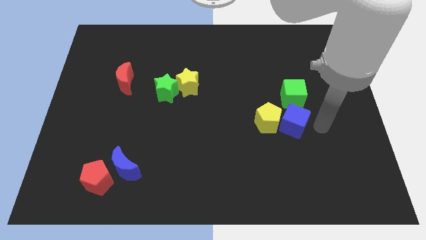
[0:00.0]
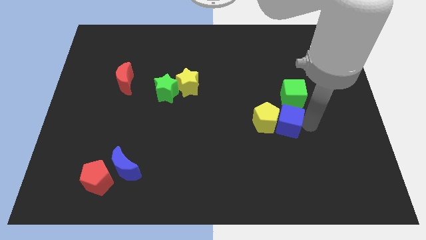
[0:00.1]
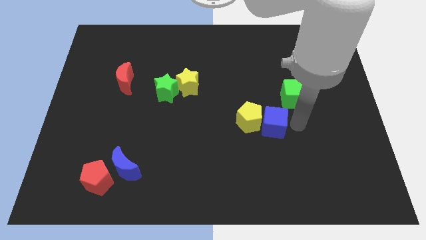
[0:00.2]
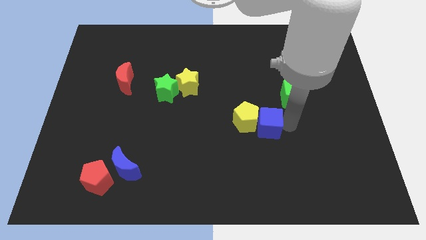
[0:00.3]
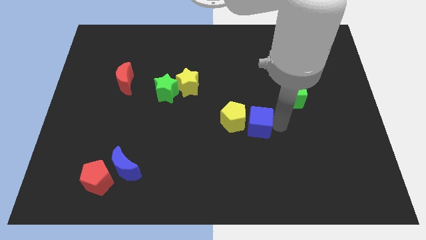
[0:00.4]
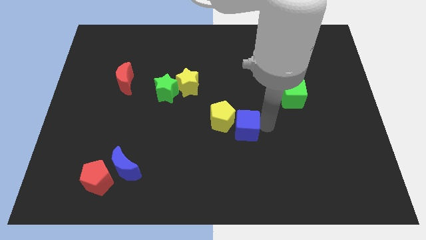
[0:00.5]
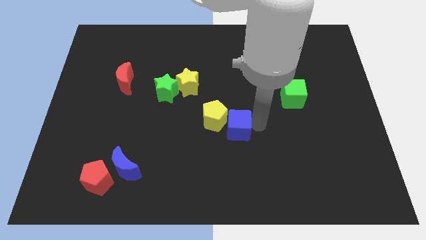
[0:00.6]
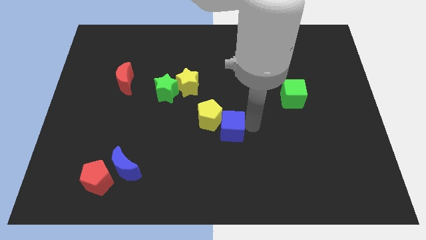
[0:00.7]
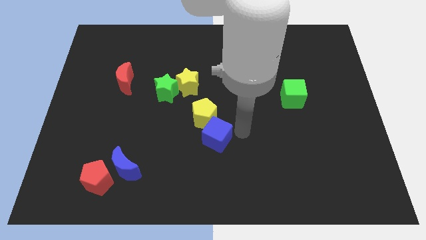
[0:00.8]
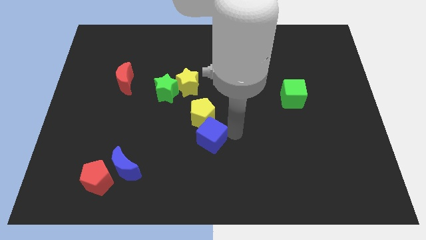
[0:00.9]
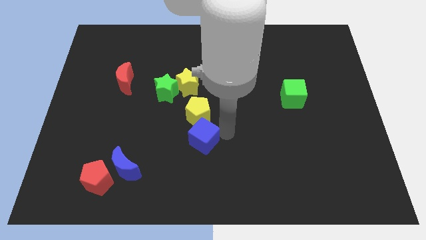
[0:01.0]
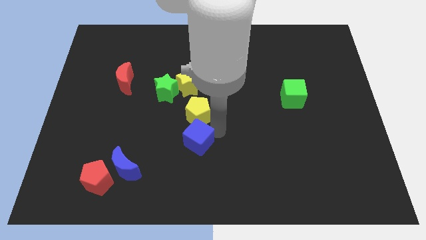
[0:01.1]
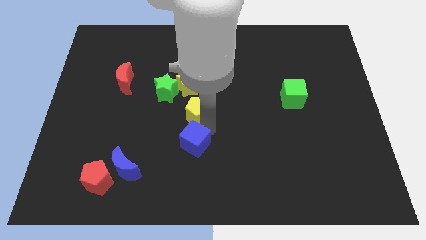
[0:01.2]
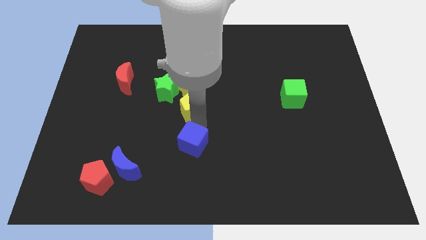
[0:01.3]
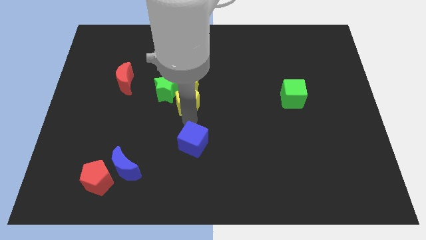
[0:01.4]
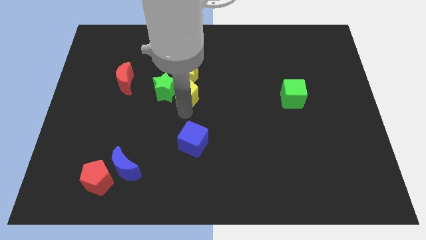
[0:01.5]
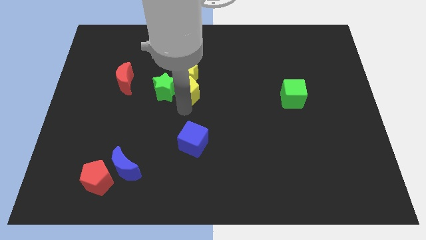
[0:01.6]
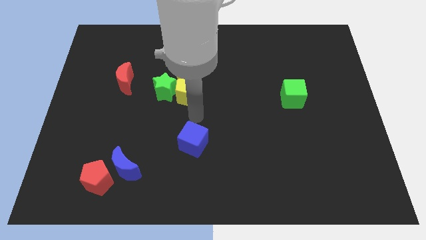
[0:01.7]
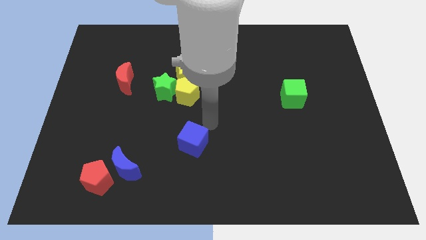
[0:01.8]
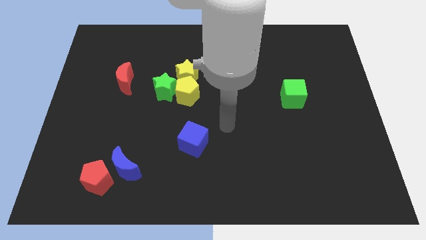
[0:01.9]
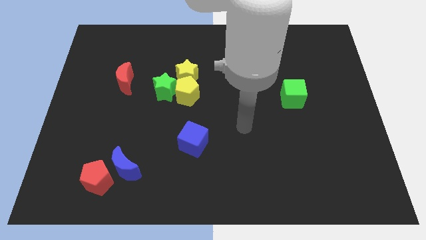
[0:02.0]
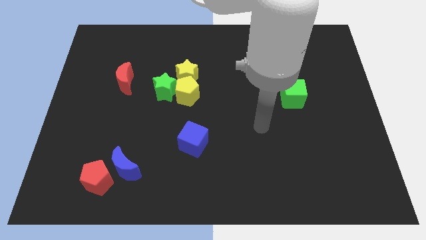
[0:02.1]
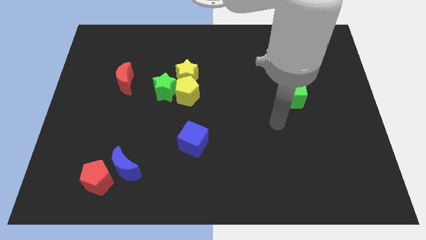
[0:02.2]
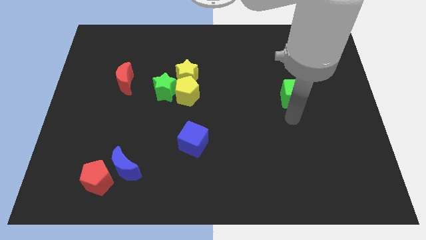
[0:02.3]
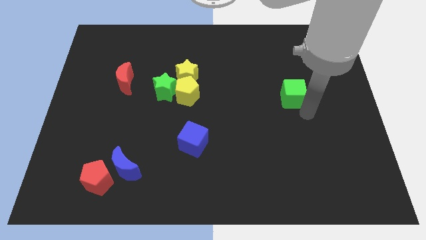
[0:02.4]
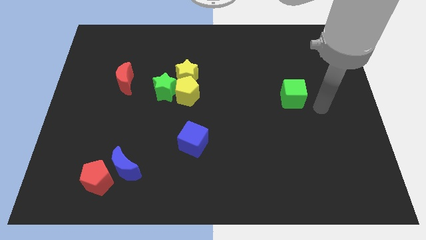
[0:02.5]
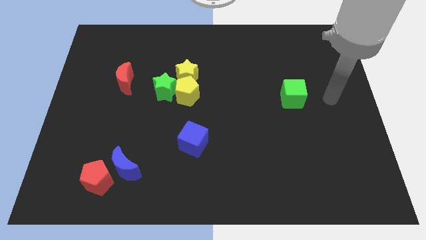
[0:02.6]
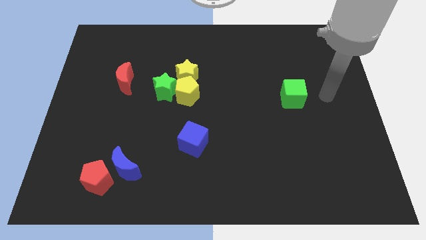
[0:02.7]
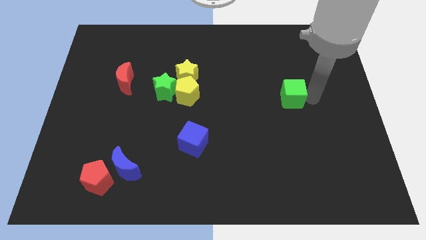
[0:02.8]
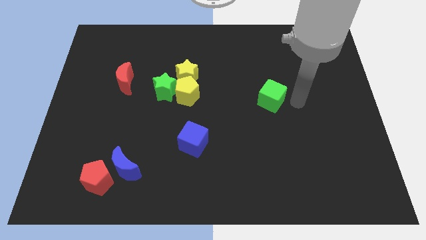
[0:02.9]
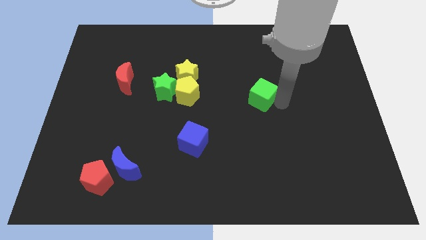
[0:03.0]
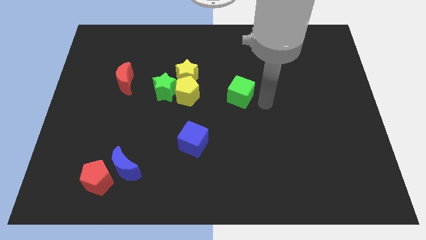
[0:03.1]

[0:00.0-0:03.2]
move the green cube to the right side of the yellow pentagon

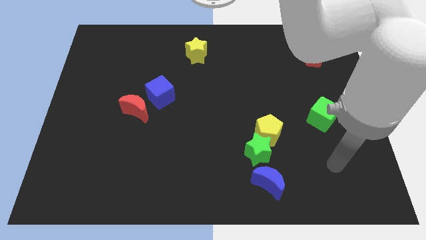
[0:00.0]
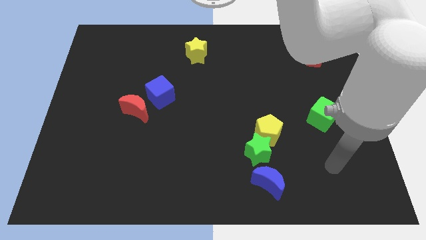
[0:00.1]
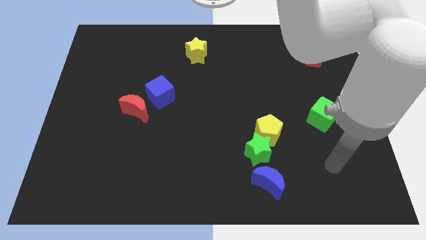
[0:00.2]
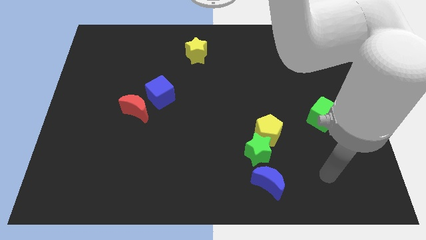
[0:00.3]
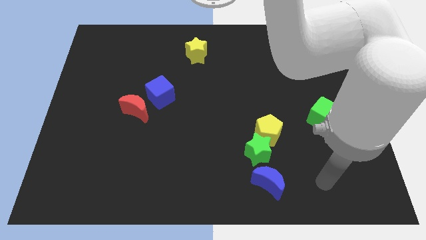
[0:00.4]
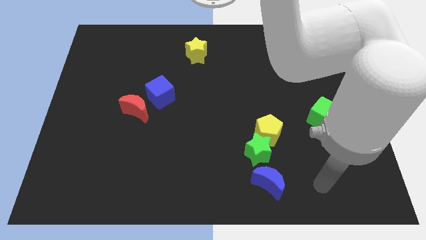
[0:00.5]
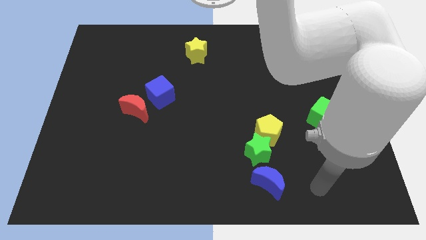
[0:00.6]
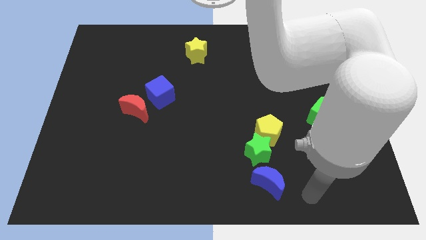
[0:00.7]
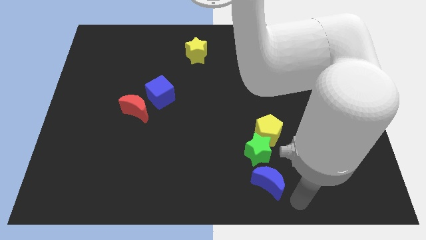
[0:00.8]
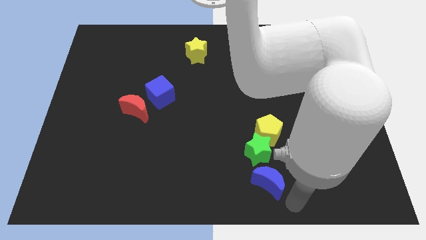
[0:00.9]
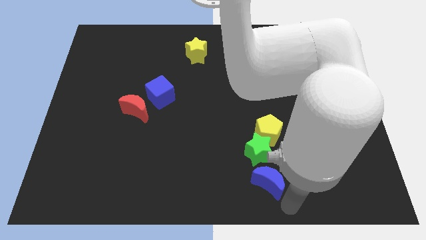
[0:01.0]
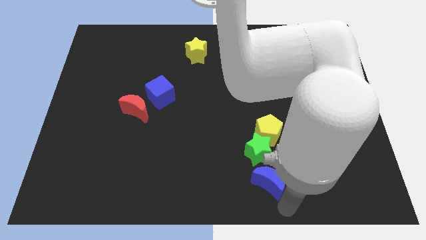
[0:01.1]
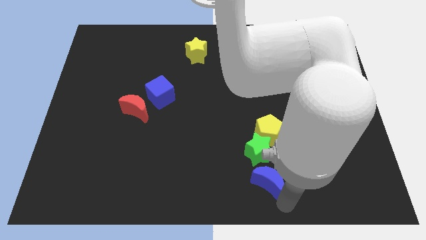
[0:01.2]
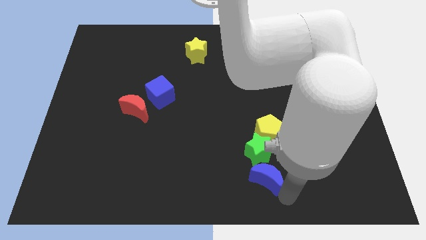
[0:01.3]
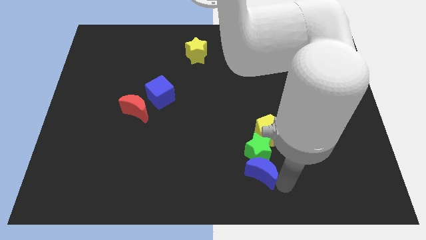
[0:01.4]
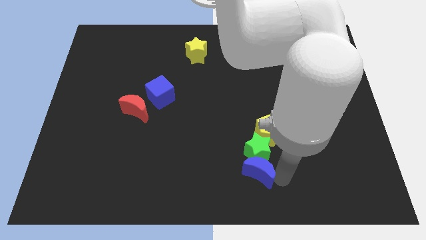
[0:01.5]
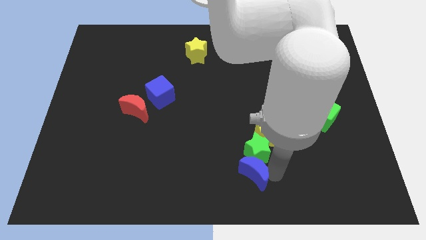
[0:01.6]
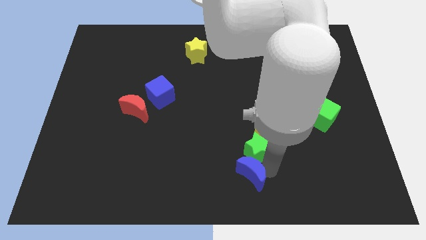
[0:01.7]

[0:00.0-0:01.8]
make the blue crescent to touch the green star

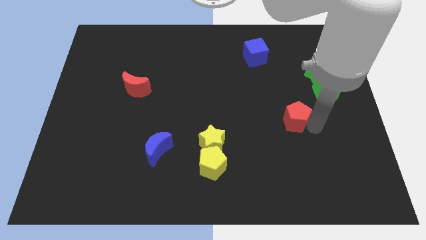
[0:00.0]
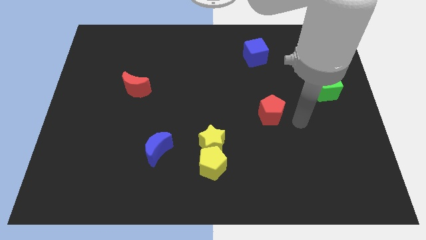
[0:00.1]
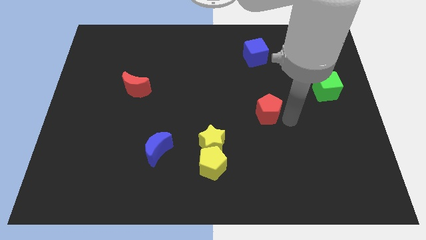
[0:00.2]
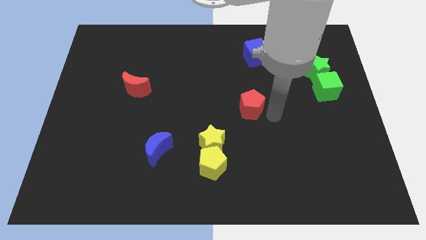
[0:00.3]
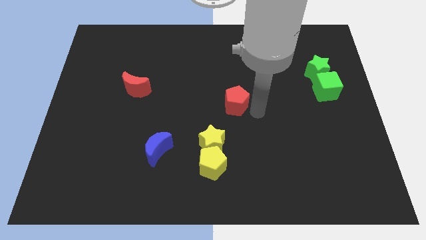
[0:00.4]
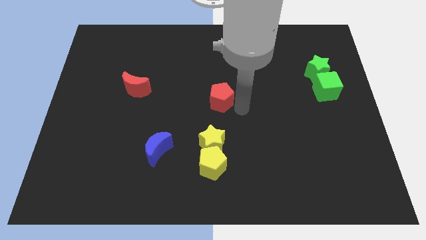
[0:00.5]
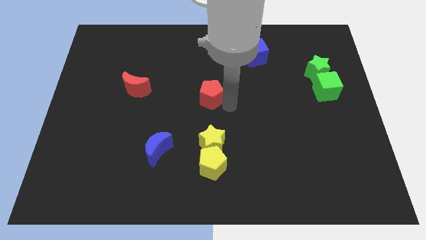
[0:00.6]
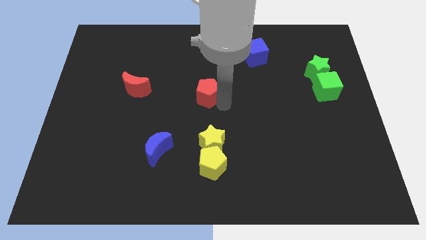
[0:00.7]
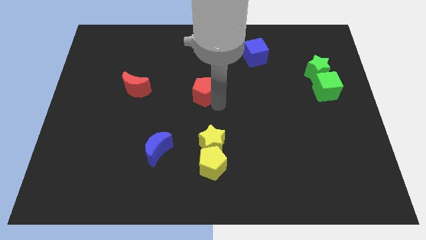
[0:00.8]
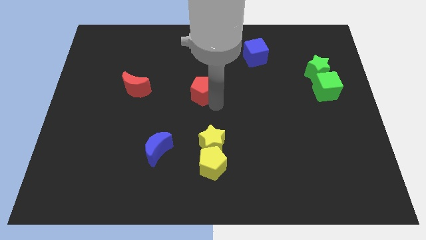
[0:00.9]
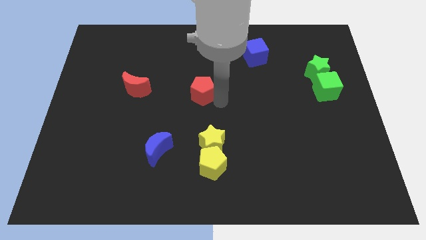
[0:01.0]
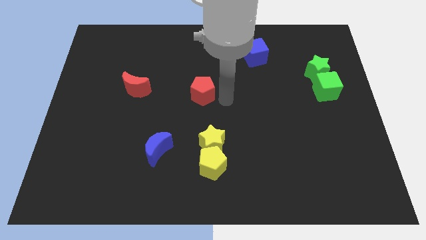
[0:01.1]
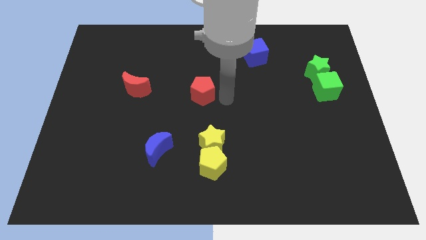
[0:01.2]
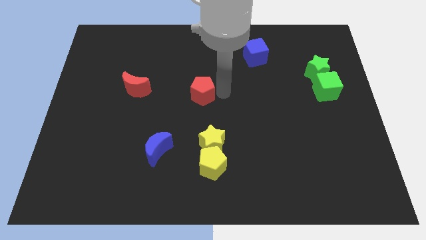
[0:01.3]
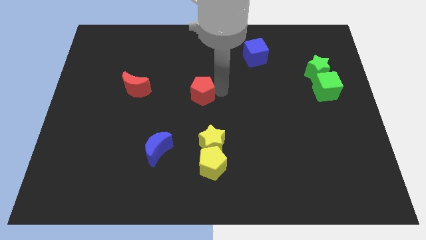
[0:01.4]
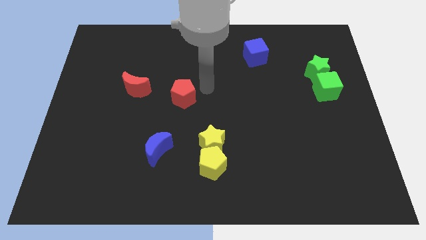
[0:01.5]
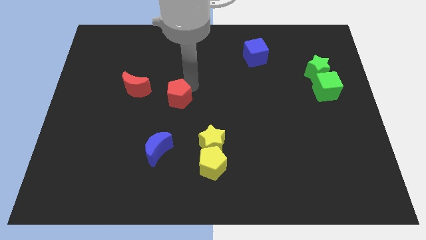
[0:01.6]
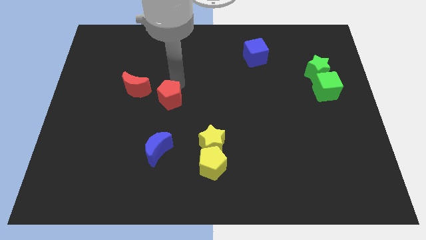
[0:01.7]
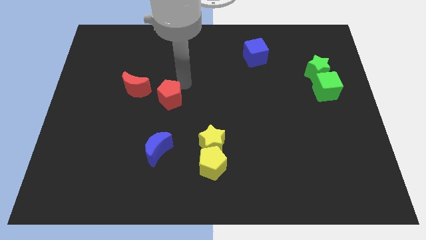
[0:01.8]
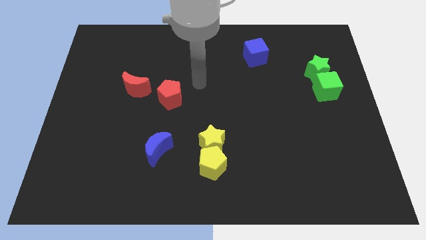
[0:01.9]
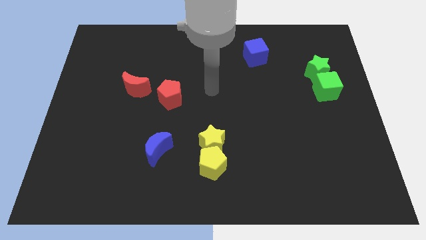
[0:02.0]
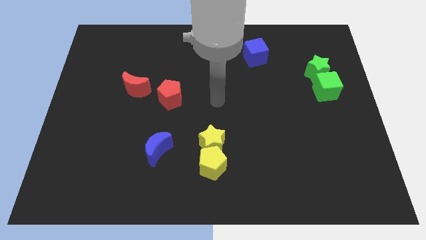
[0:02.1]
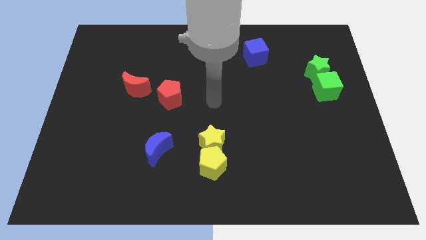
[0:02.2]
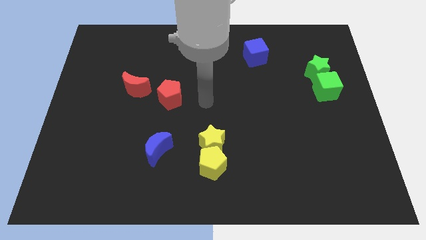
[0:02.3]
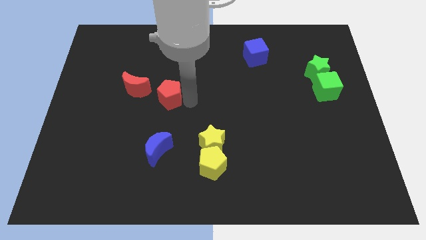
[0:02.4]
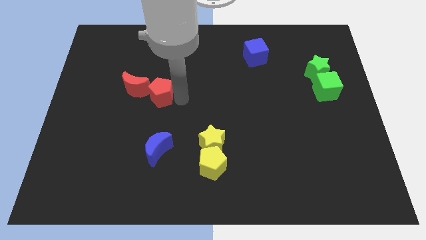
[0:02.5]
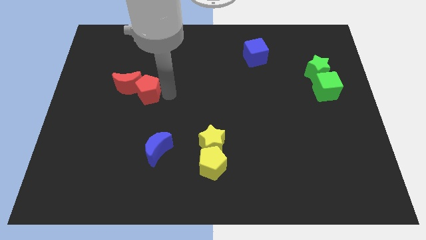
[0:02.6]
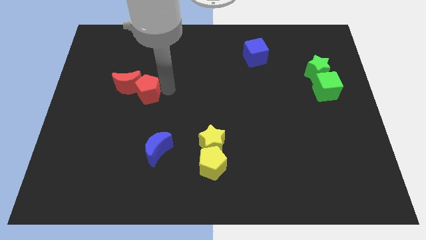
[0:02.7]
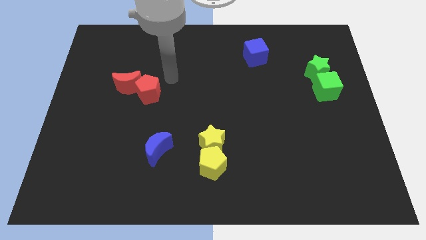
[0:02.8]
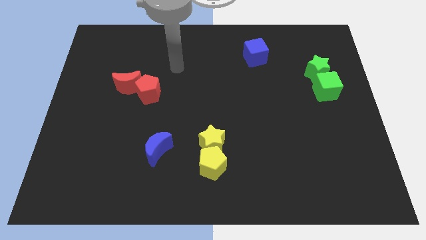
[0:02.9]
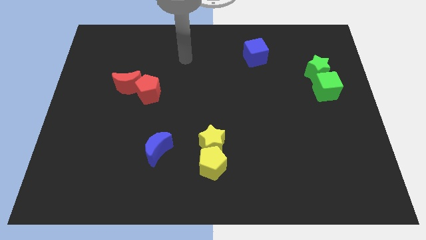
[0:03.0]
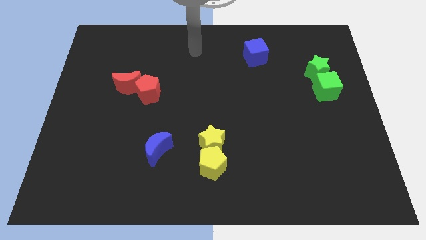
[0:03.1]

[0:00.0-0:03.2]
push the red pentagon close to the red moon

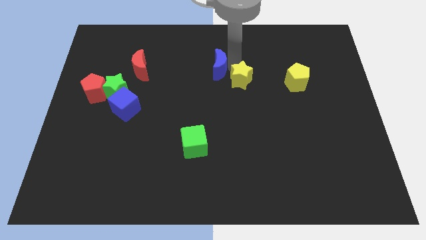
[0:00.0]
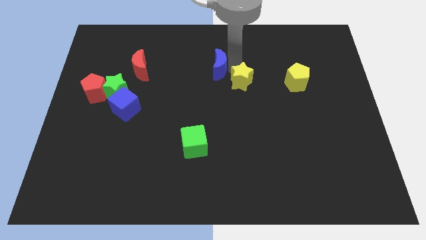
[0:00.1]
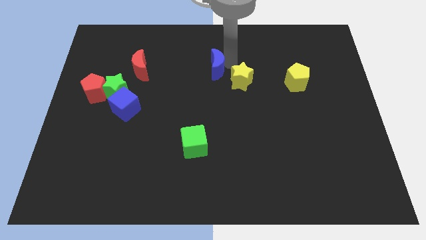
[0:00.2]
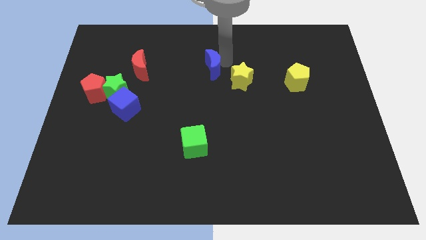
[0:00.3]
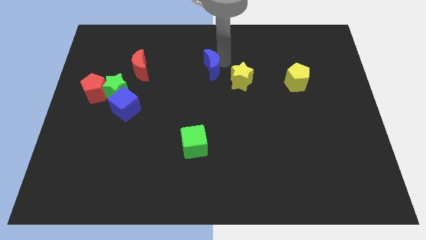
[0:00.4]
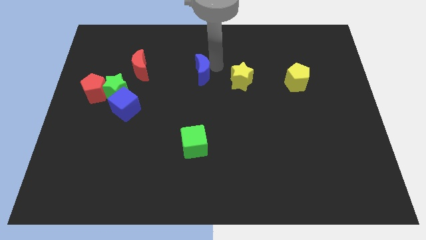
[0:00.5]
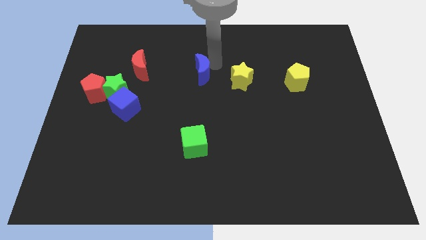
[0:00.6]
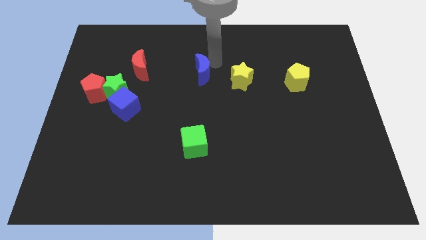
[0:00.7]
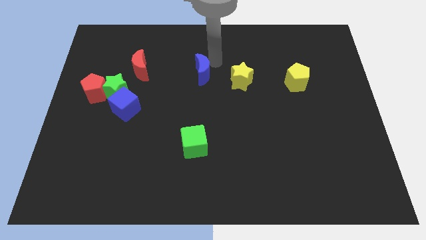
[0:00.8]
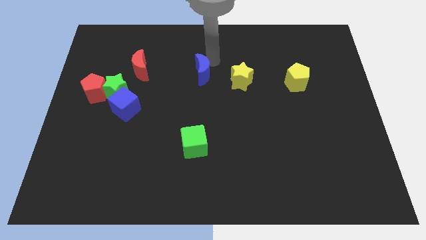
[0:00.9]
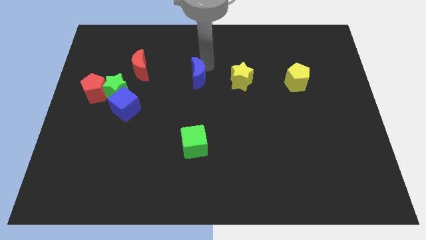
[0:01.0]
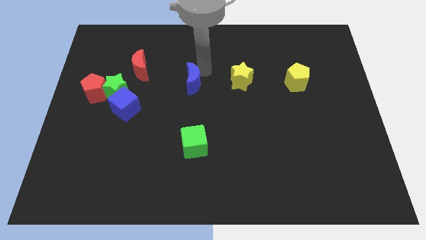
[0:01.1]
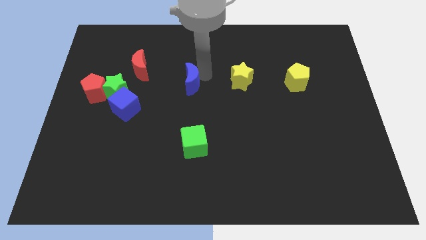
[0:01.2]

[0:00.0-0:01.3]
push blue crescent above green cube
